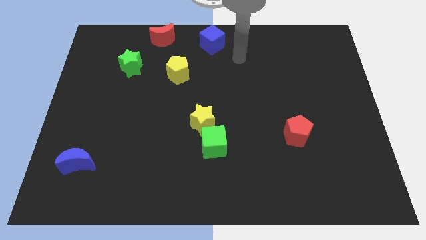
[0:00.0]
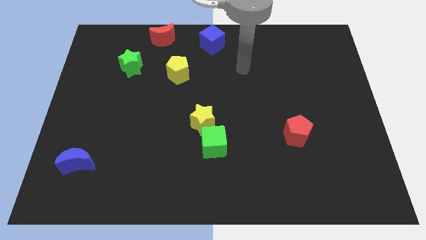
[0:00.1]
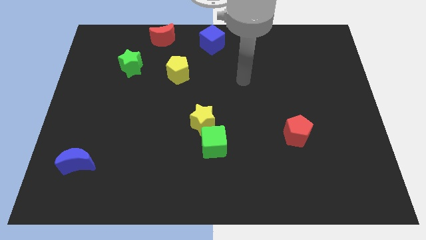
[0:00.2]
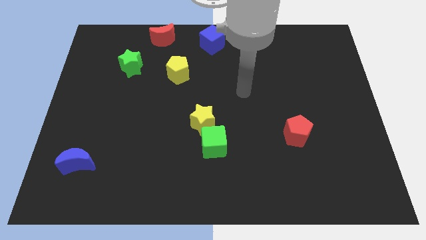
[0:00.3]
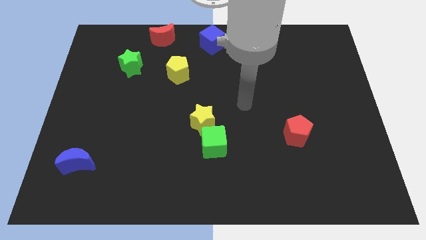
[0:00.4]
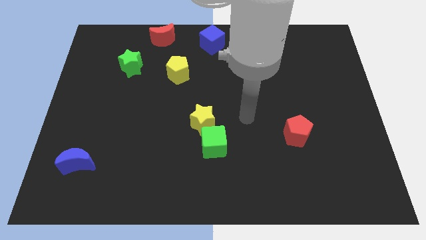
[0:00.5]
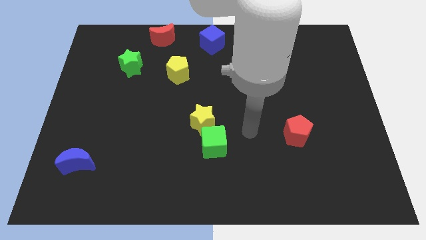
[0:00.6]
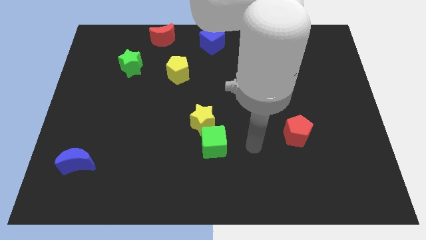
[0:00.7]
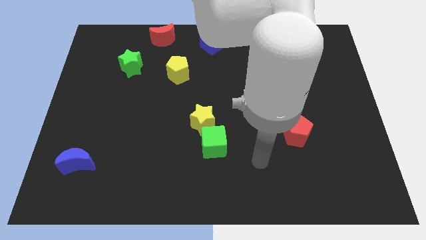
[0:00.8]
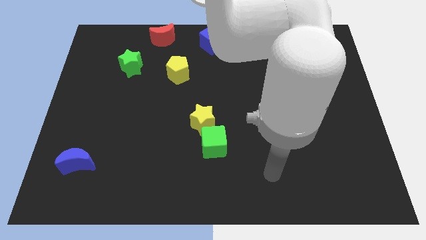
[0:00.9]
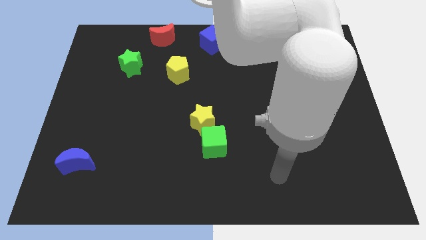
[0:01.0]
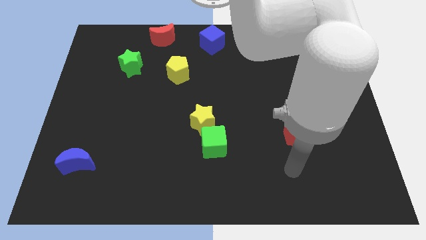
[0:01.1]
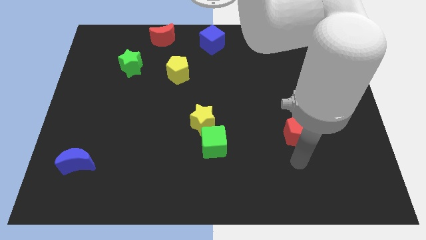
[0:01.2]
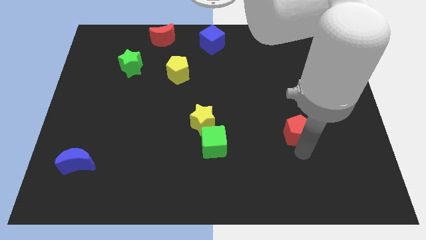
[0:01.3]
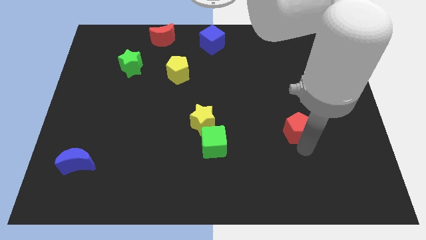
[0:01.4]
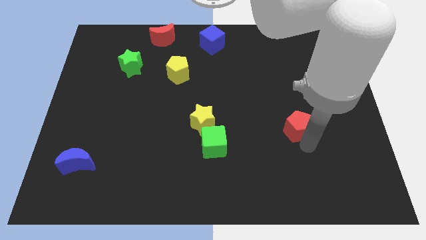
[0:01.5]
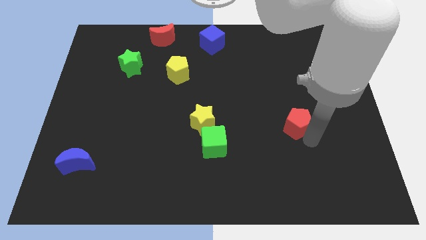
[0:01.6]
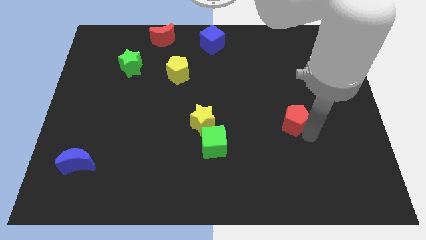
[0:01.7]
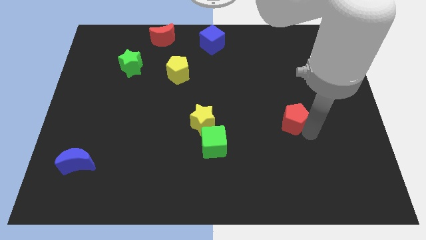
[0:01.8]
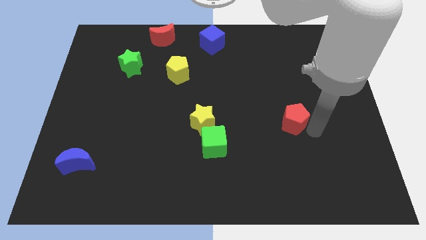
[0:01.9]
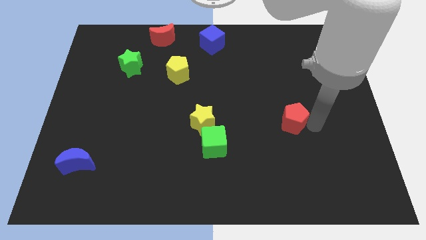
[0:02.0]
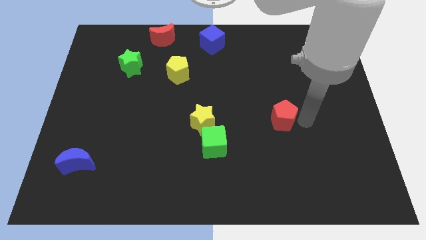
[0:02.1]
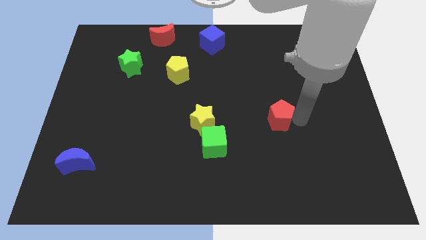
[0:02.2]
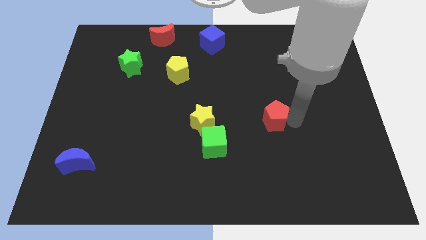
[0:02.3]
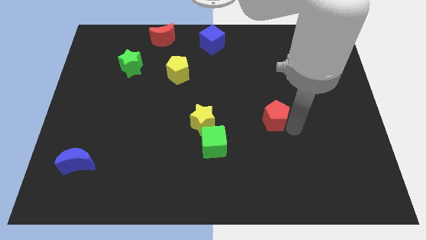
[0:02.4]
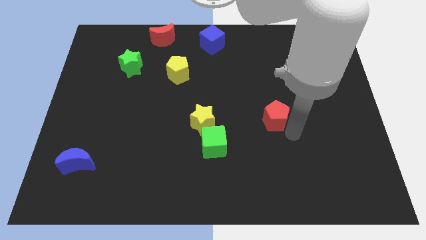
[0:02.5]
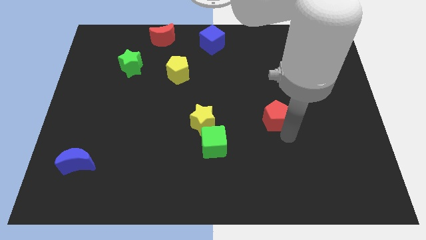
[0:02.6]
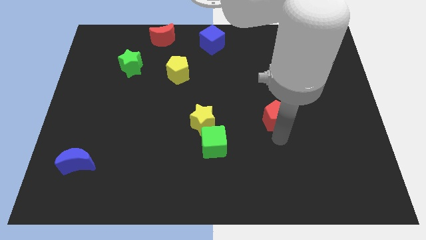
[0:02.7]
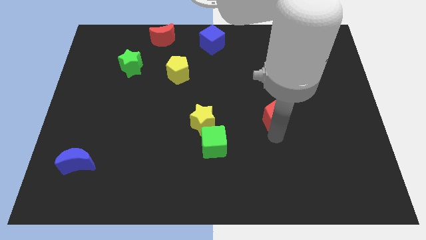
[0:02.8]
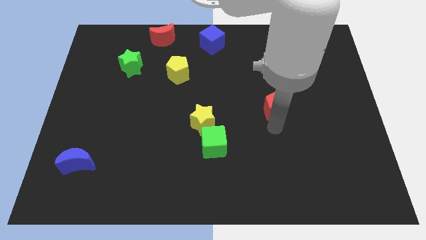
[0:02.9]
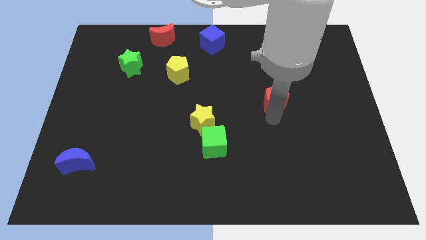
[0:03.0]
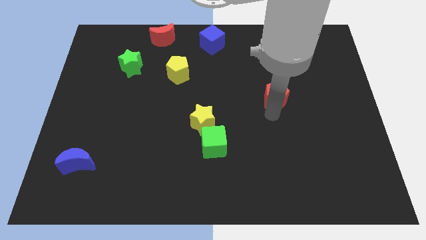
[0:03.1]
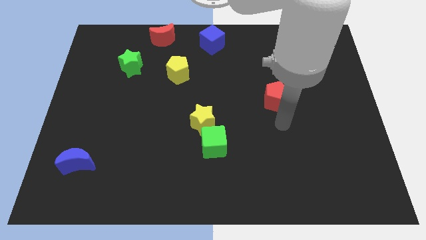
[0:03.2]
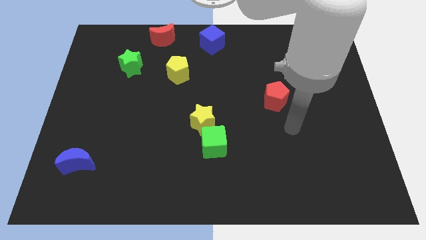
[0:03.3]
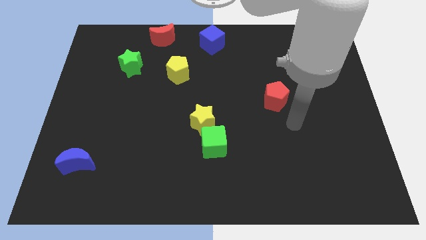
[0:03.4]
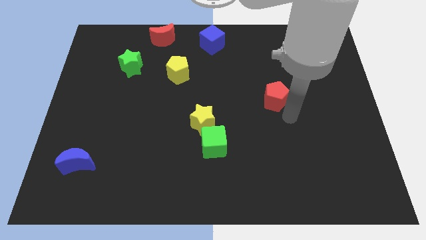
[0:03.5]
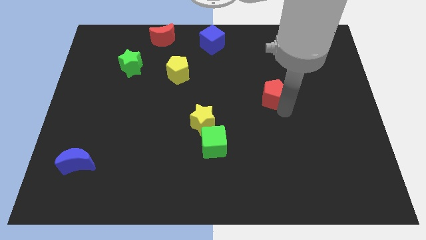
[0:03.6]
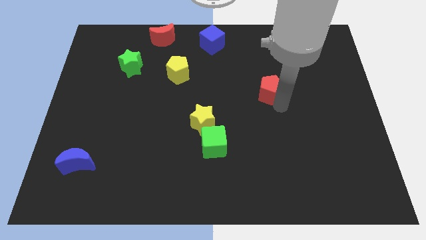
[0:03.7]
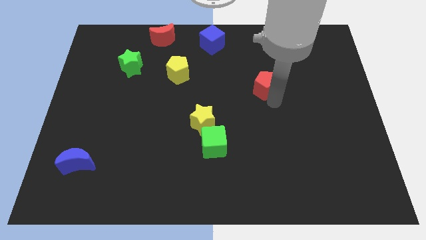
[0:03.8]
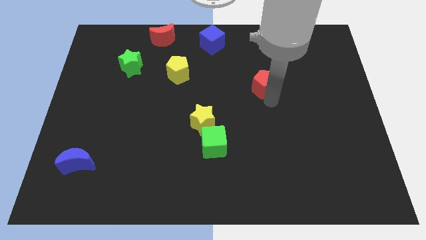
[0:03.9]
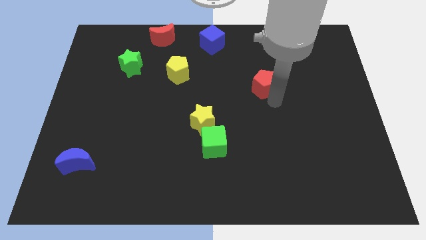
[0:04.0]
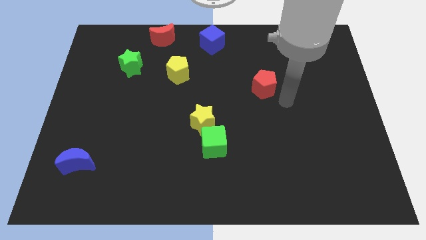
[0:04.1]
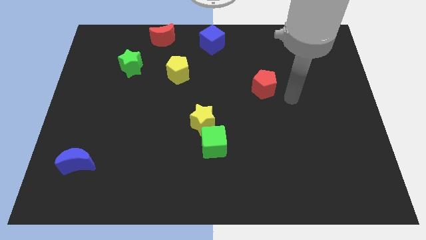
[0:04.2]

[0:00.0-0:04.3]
push the red pentagon to the top of the board

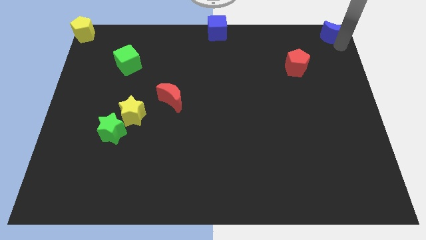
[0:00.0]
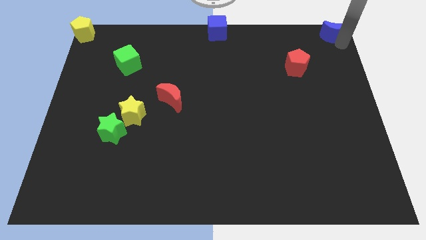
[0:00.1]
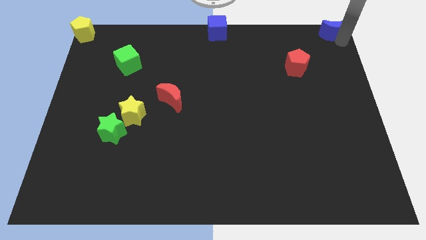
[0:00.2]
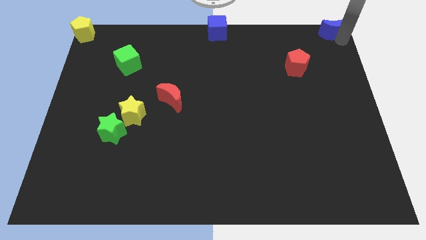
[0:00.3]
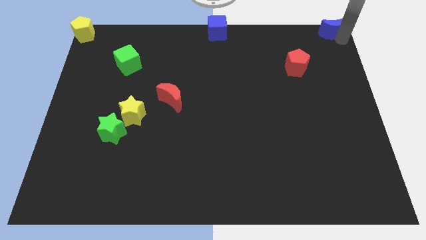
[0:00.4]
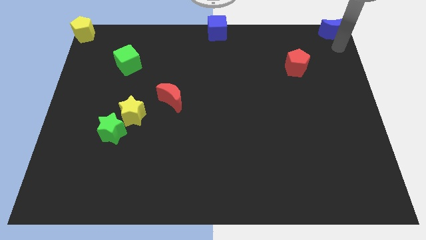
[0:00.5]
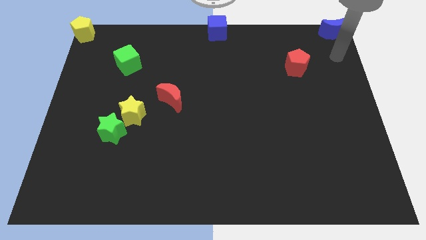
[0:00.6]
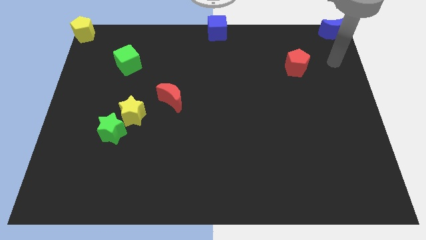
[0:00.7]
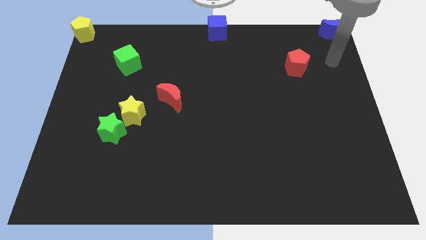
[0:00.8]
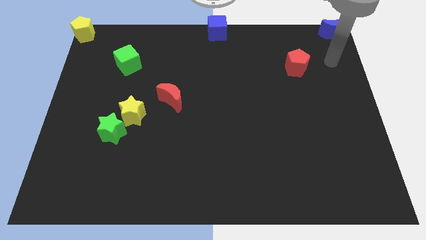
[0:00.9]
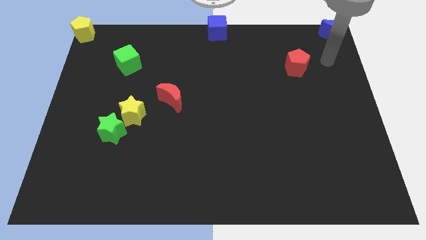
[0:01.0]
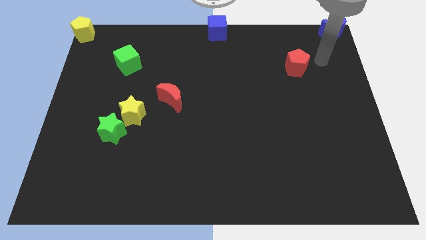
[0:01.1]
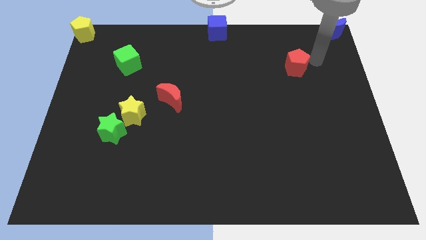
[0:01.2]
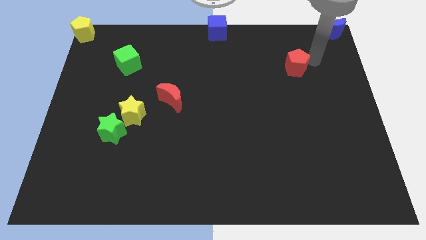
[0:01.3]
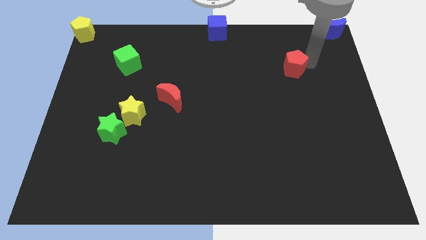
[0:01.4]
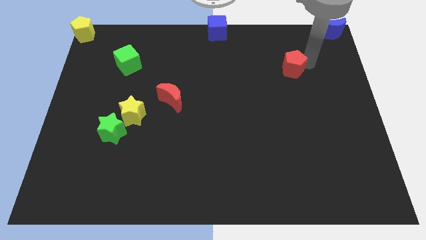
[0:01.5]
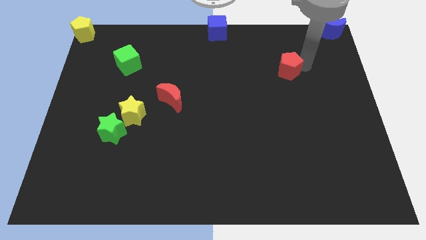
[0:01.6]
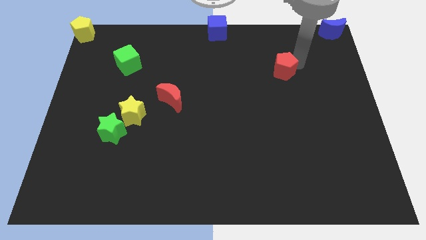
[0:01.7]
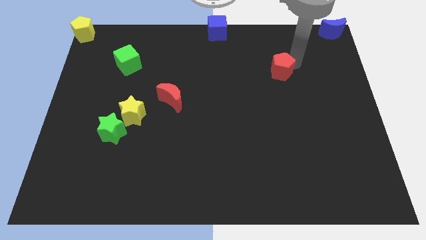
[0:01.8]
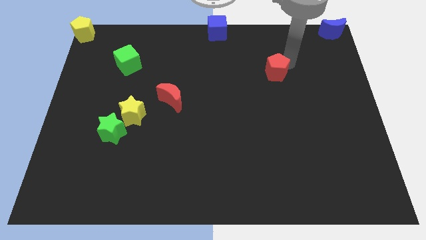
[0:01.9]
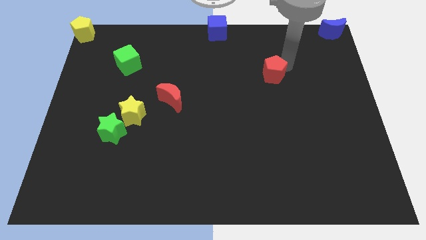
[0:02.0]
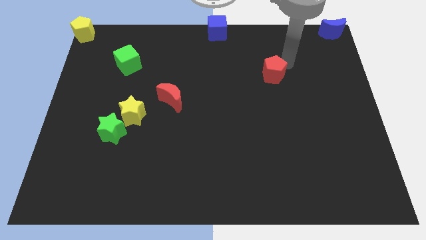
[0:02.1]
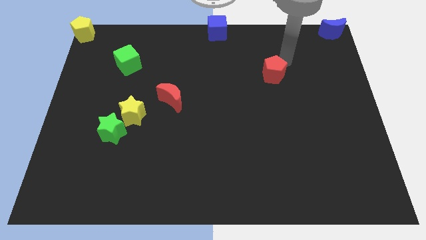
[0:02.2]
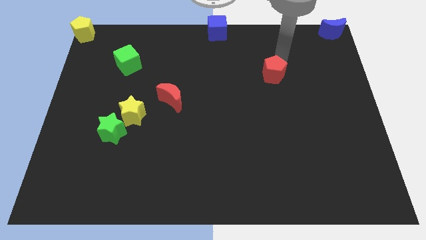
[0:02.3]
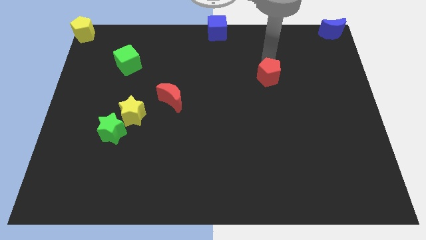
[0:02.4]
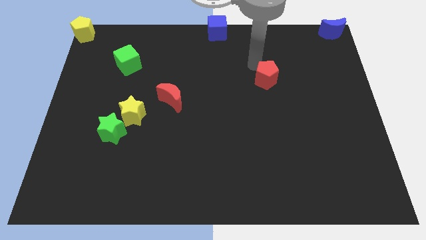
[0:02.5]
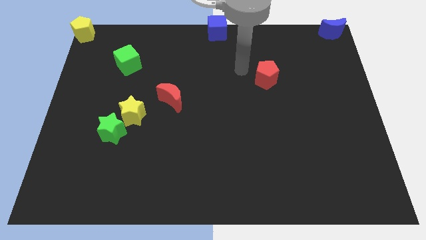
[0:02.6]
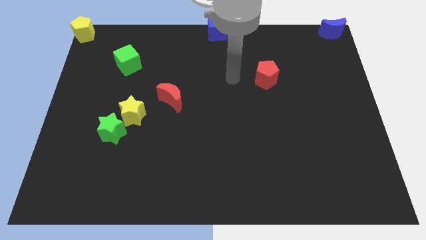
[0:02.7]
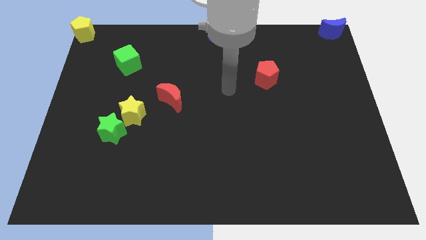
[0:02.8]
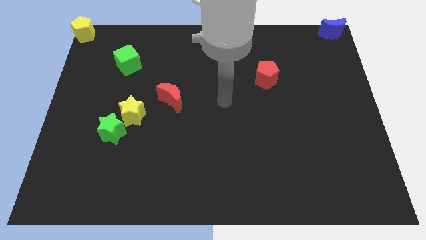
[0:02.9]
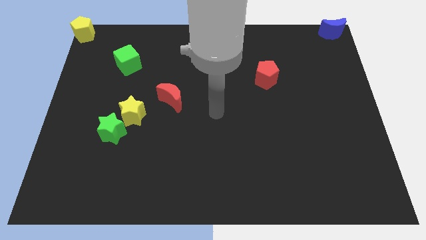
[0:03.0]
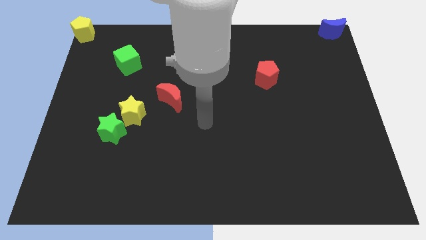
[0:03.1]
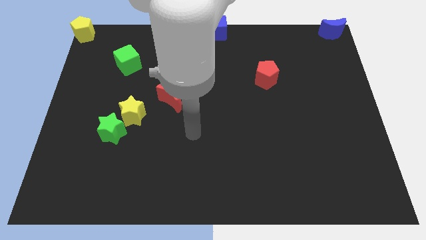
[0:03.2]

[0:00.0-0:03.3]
push red pentagon slightly towards down

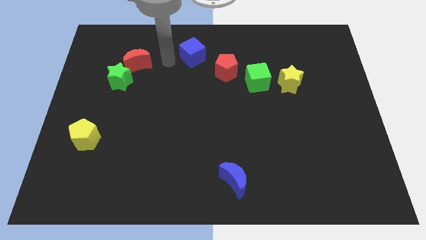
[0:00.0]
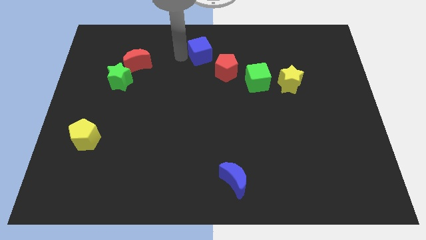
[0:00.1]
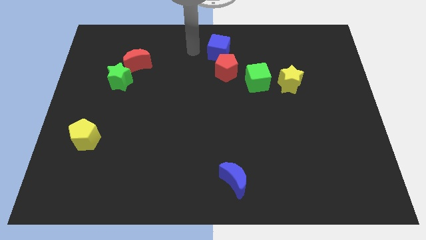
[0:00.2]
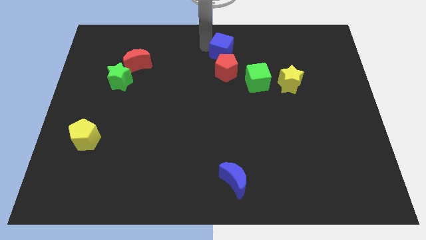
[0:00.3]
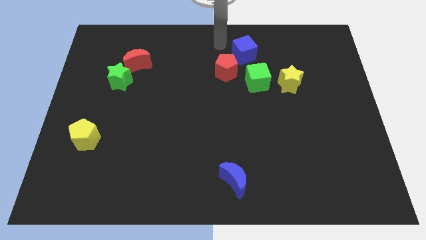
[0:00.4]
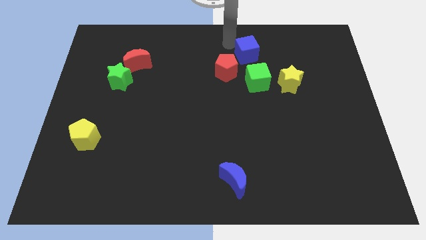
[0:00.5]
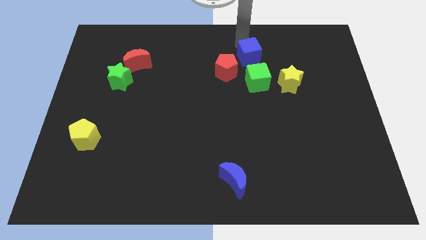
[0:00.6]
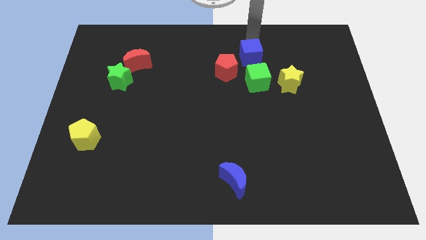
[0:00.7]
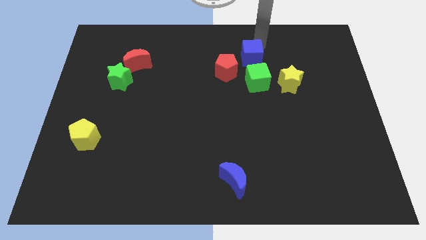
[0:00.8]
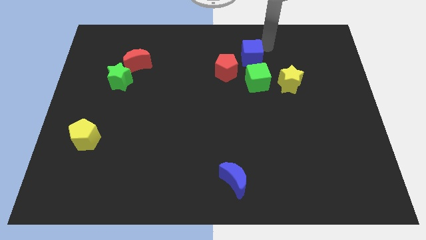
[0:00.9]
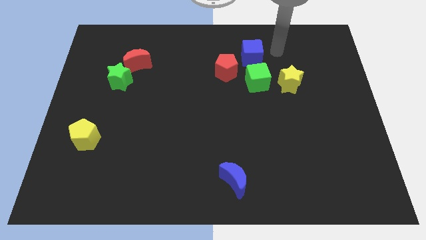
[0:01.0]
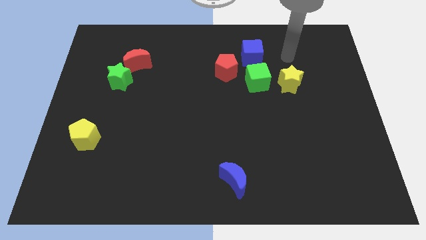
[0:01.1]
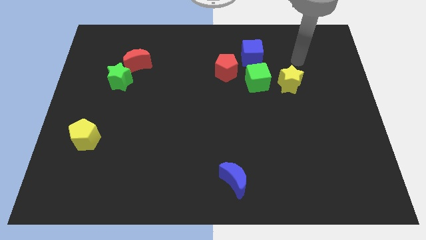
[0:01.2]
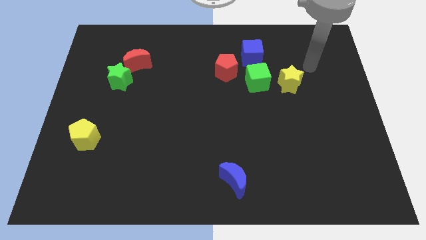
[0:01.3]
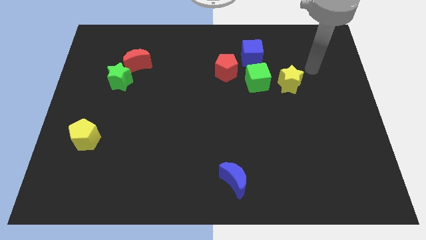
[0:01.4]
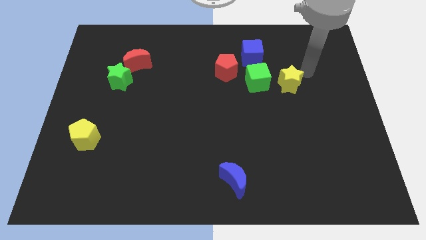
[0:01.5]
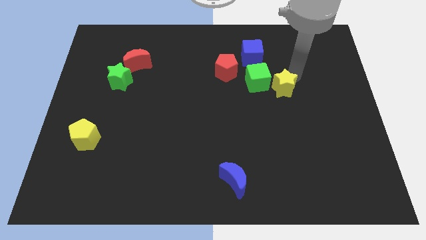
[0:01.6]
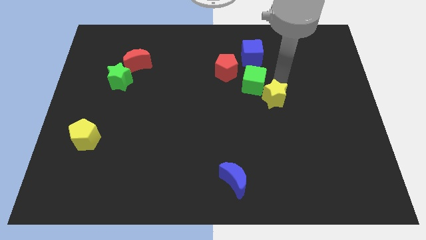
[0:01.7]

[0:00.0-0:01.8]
drag blue cube above green cube
